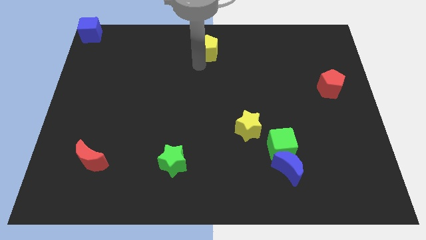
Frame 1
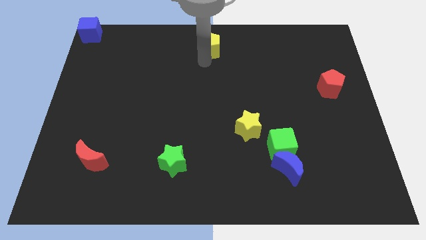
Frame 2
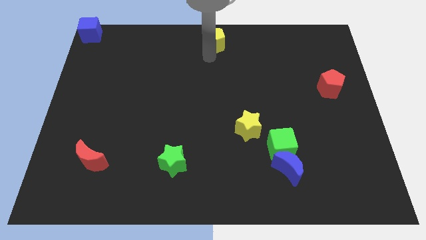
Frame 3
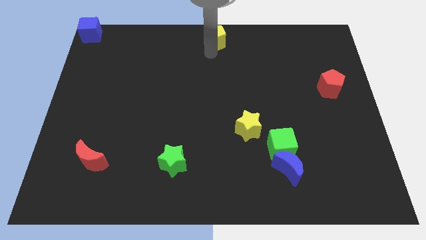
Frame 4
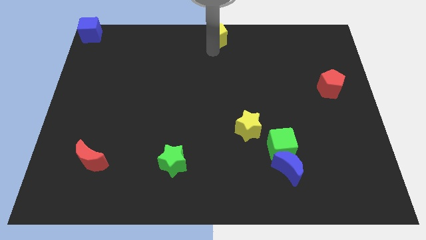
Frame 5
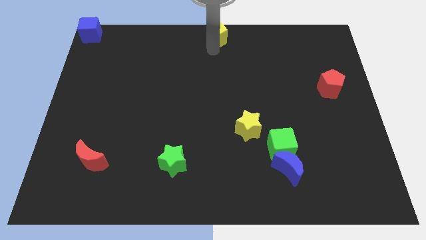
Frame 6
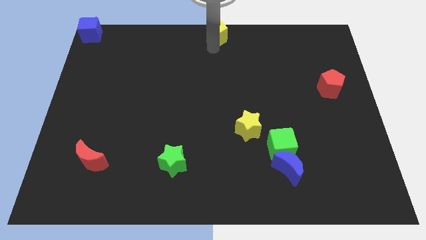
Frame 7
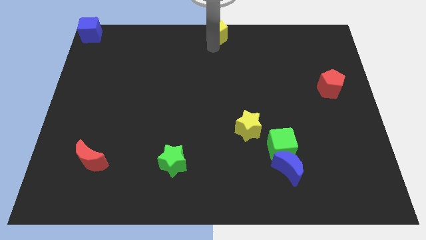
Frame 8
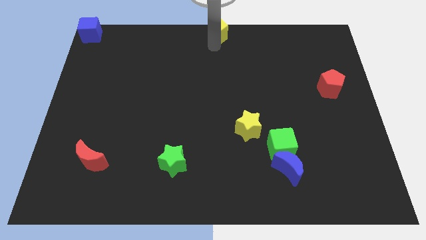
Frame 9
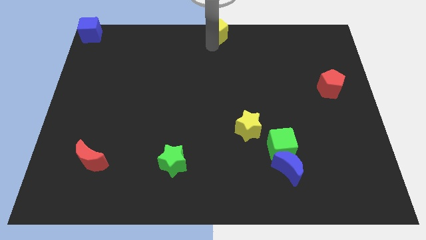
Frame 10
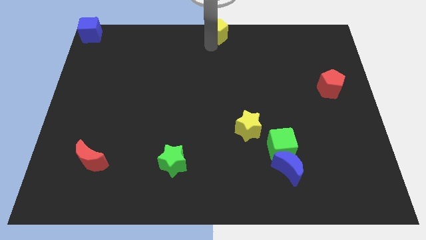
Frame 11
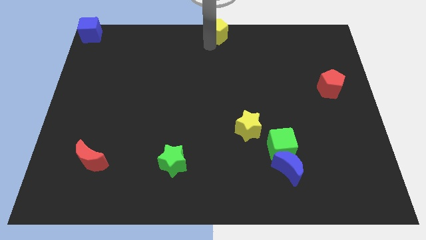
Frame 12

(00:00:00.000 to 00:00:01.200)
move the yellow pentagon to the top center of the board

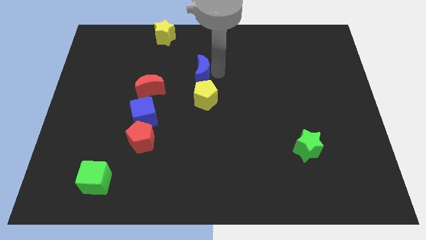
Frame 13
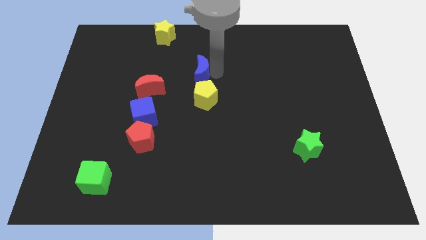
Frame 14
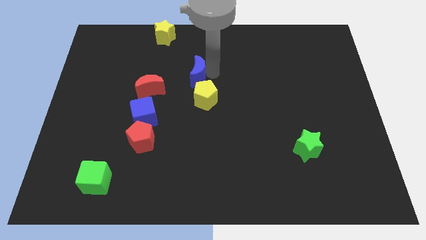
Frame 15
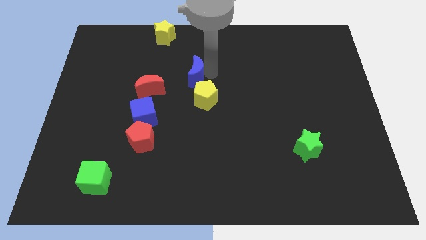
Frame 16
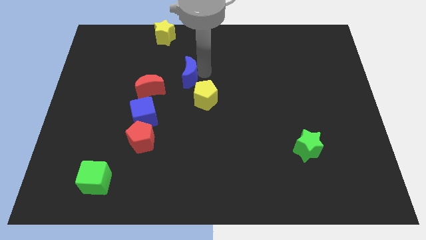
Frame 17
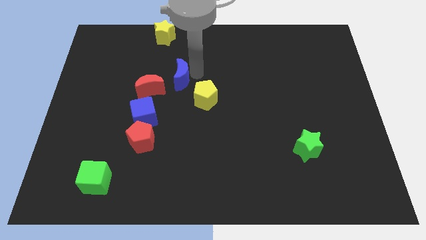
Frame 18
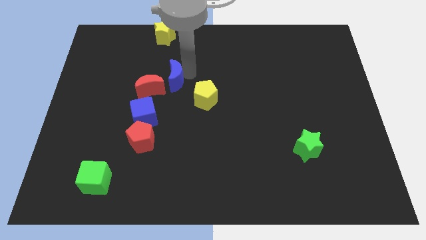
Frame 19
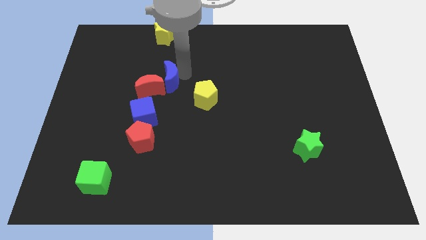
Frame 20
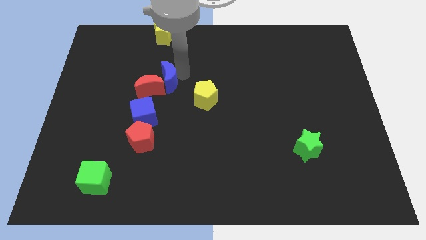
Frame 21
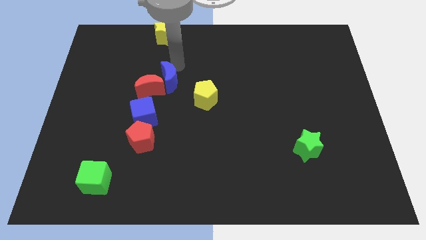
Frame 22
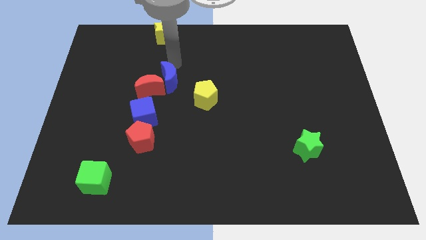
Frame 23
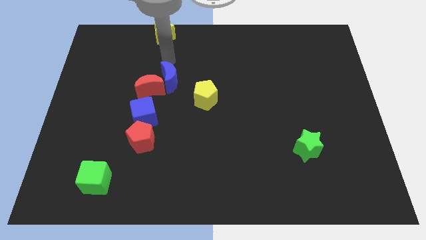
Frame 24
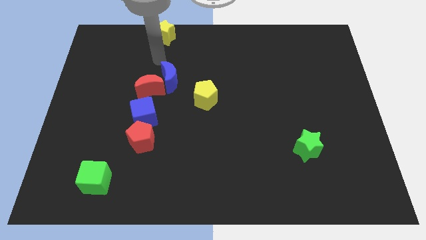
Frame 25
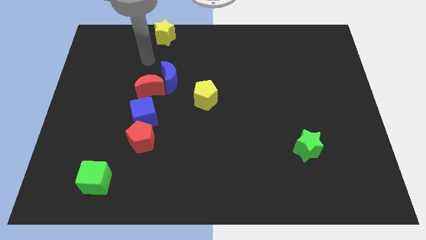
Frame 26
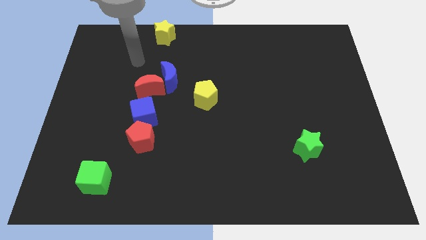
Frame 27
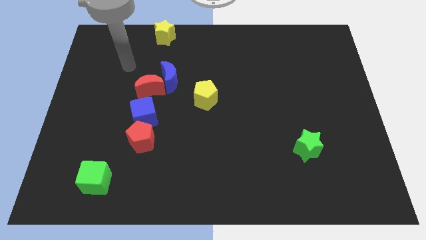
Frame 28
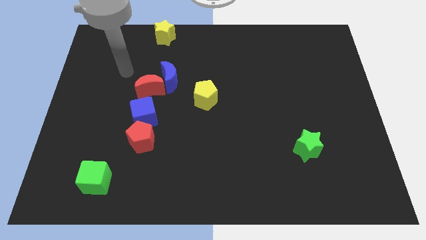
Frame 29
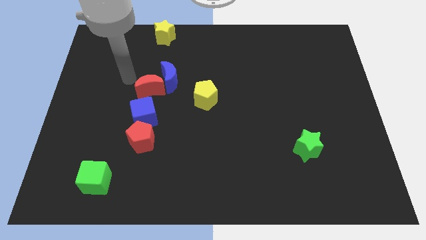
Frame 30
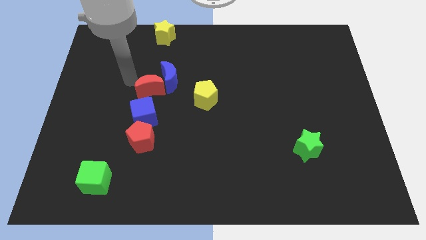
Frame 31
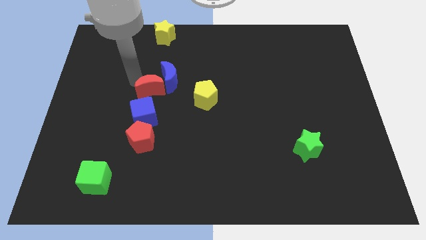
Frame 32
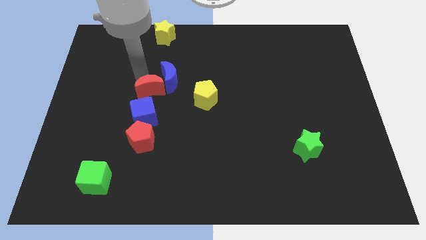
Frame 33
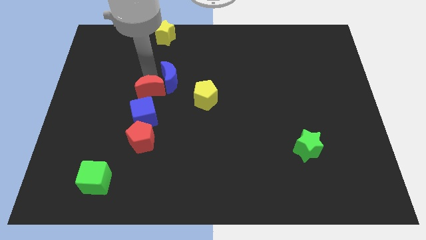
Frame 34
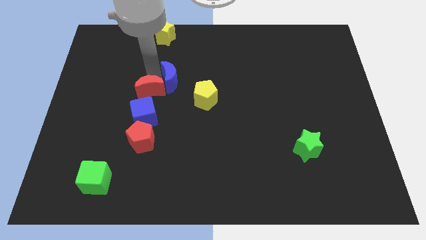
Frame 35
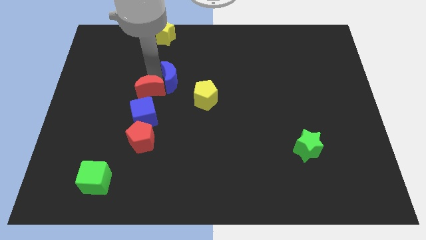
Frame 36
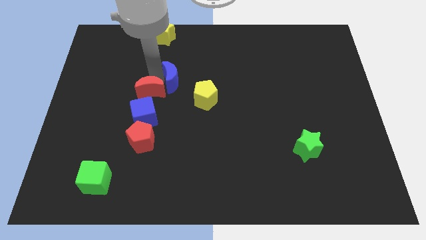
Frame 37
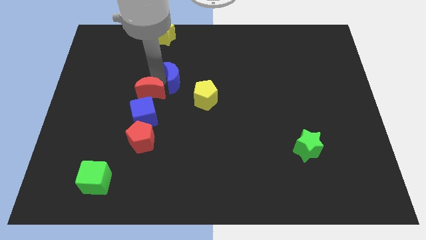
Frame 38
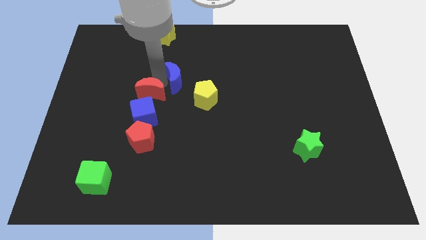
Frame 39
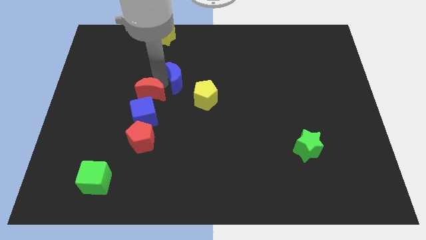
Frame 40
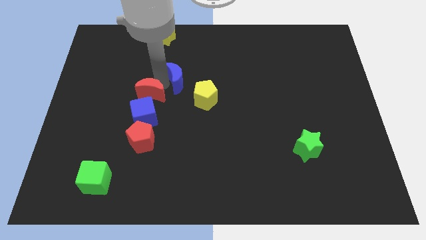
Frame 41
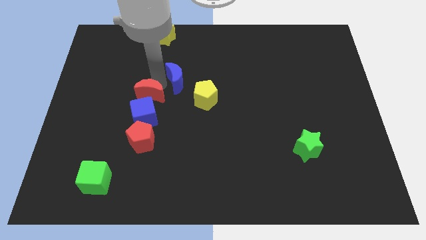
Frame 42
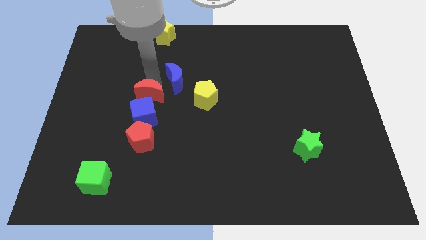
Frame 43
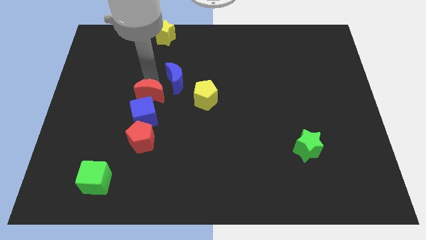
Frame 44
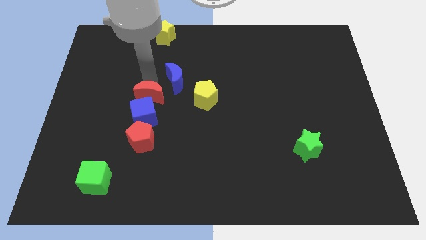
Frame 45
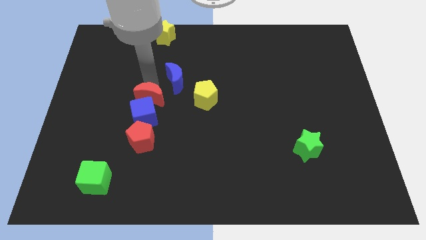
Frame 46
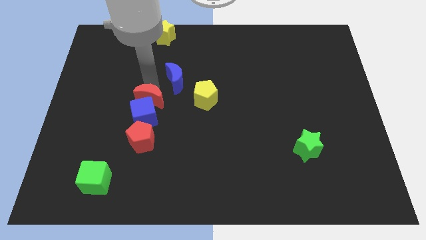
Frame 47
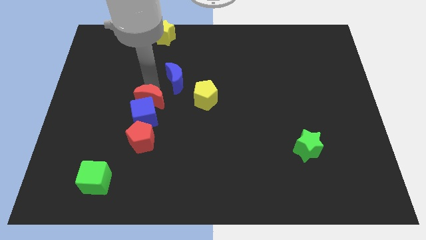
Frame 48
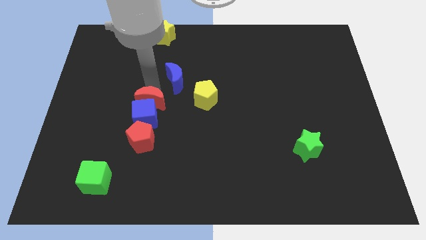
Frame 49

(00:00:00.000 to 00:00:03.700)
push the red moon into the blue cube

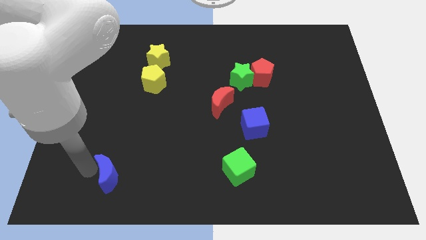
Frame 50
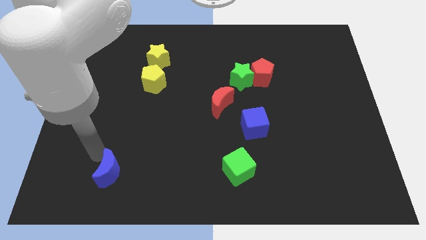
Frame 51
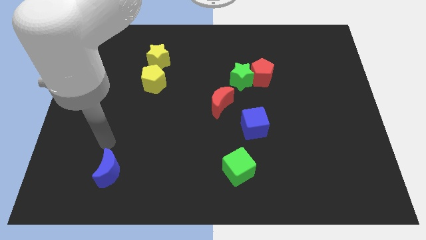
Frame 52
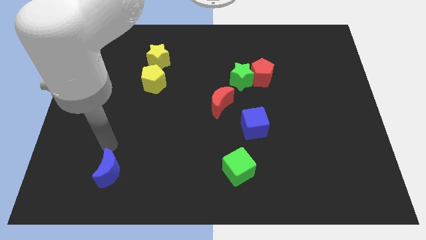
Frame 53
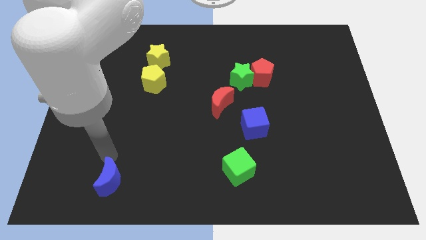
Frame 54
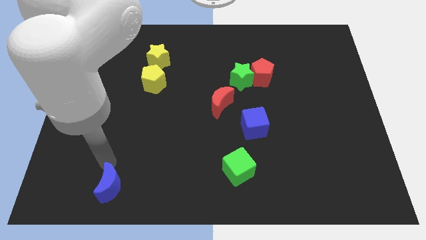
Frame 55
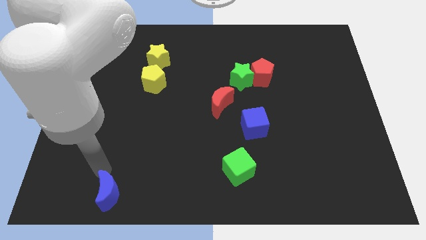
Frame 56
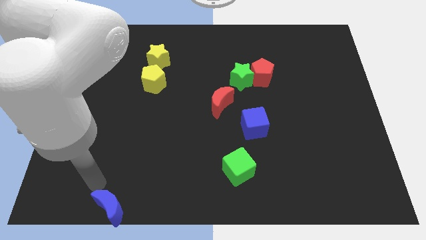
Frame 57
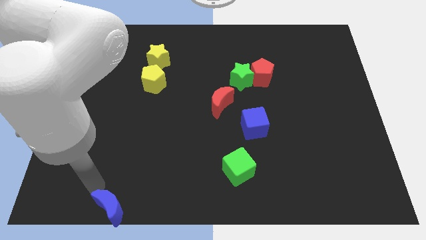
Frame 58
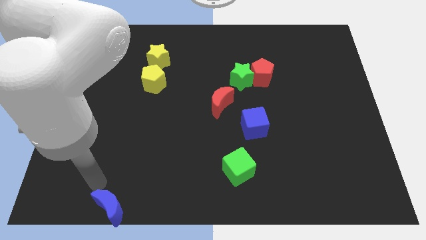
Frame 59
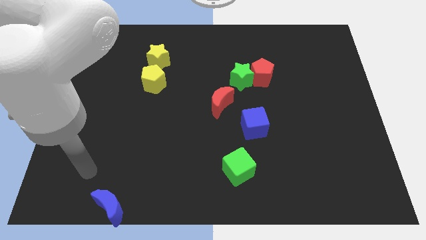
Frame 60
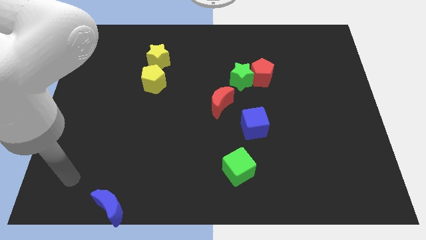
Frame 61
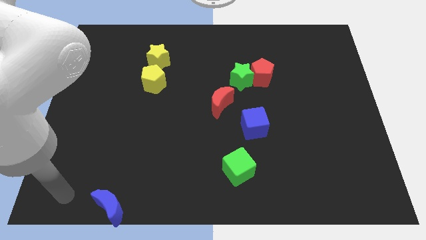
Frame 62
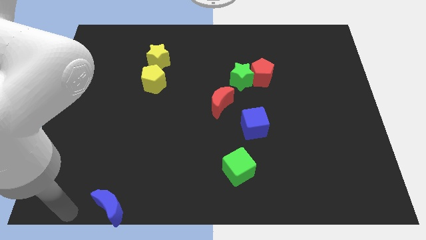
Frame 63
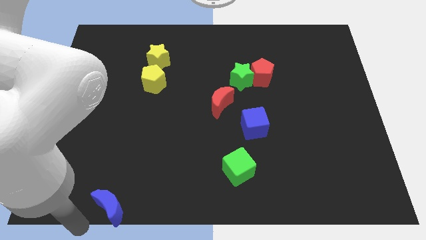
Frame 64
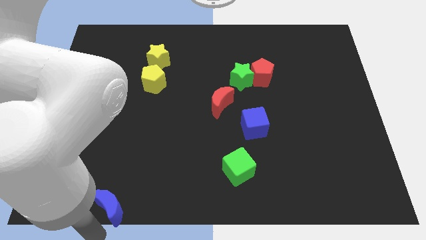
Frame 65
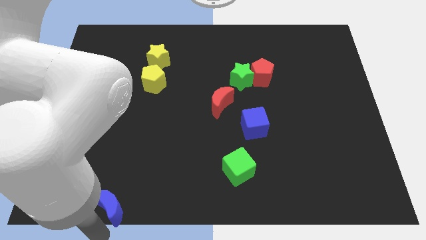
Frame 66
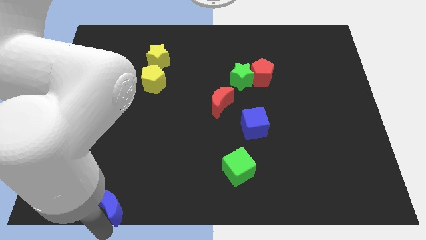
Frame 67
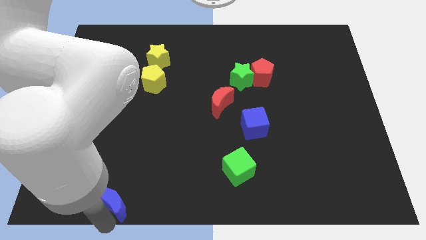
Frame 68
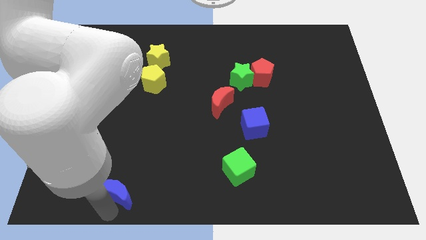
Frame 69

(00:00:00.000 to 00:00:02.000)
move blue crescent to the bottom left corner of the board

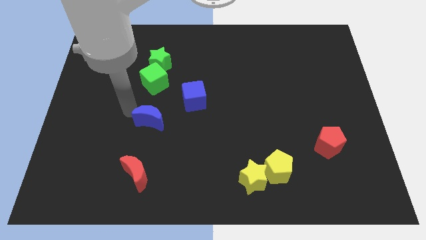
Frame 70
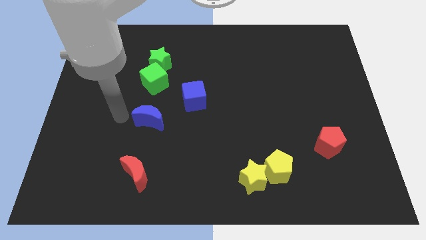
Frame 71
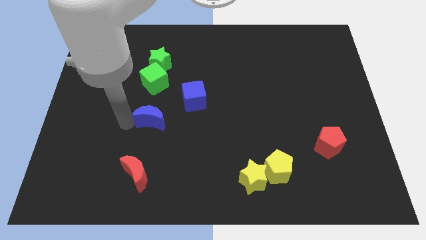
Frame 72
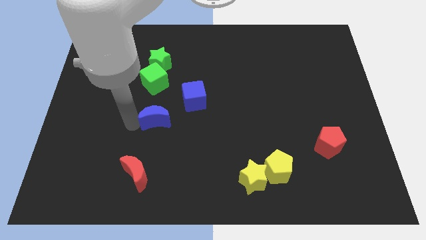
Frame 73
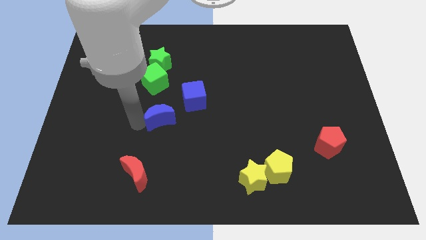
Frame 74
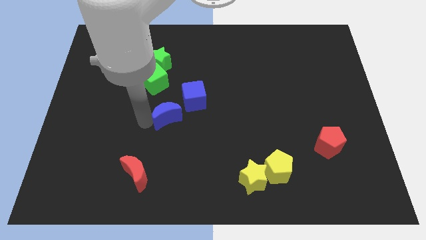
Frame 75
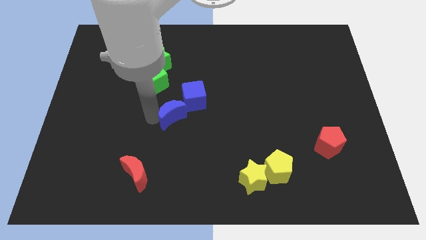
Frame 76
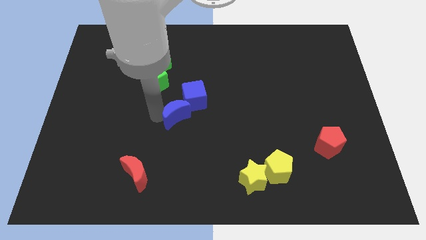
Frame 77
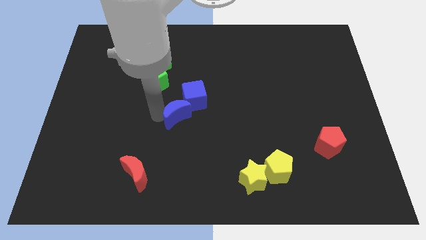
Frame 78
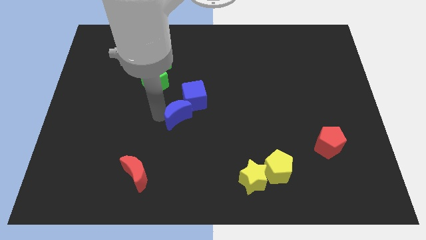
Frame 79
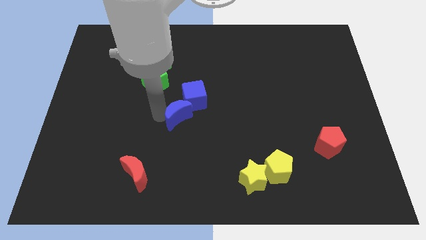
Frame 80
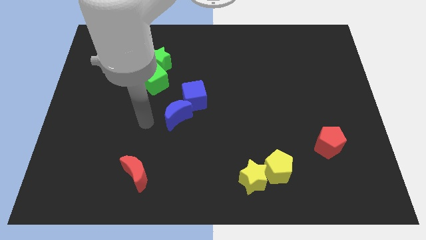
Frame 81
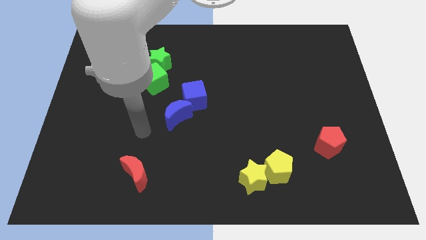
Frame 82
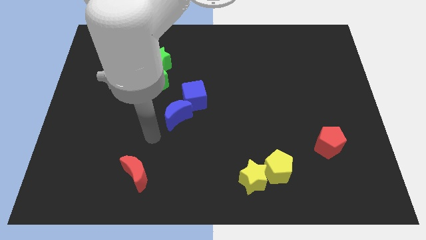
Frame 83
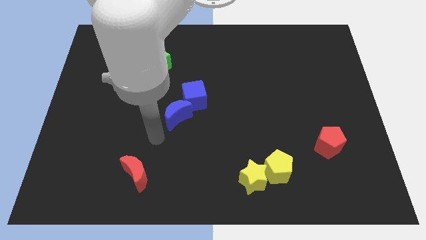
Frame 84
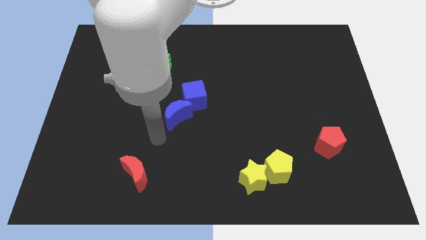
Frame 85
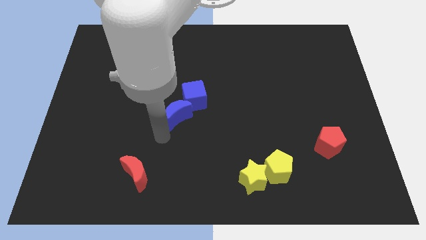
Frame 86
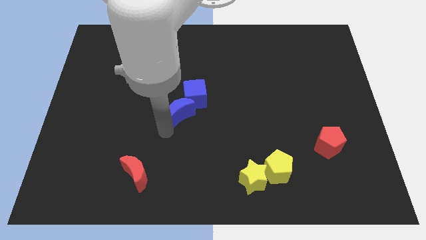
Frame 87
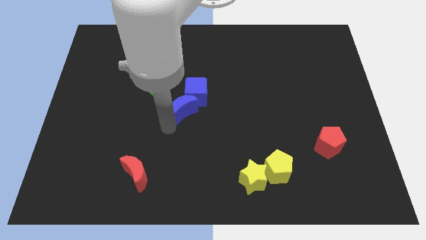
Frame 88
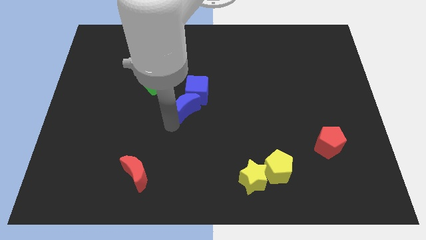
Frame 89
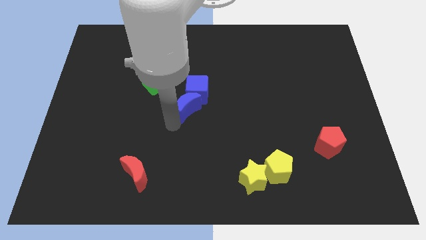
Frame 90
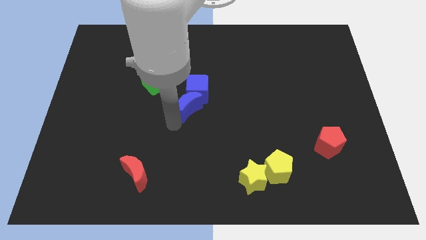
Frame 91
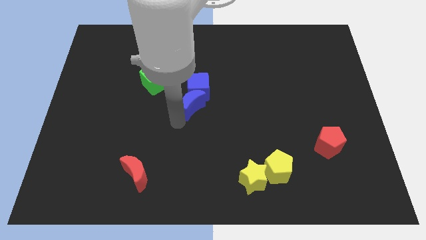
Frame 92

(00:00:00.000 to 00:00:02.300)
push the blue moon into the blue cube
